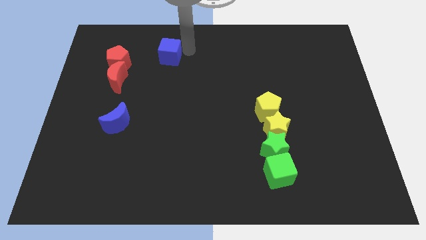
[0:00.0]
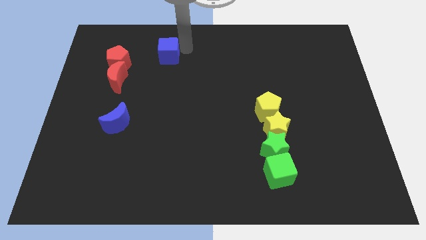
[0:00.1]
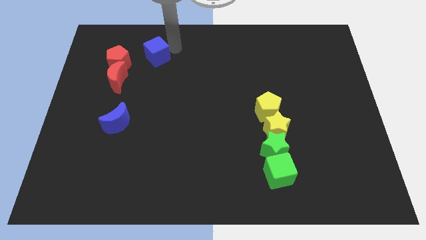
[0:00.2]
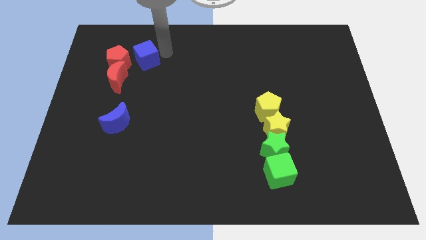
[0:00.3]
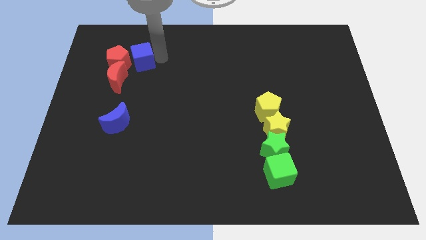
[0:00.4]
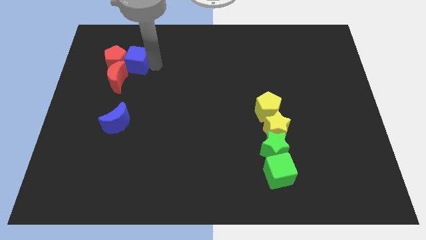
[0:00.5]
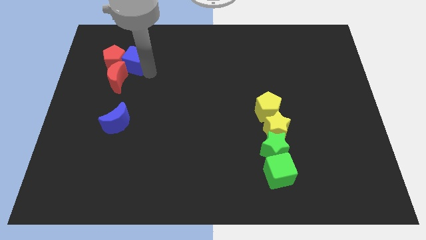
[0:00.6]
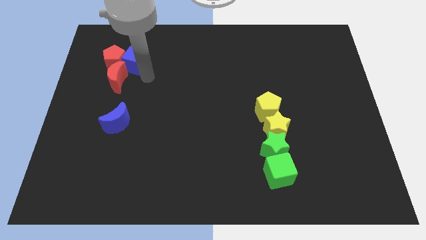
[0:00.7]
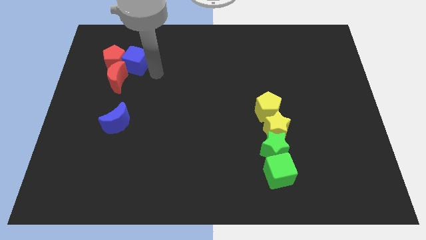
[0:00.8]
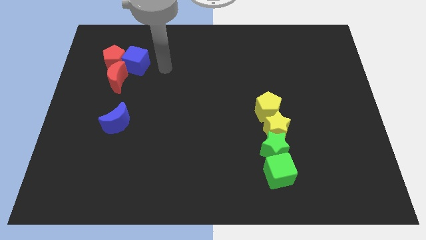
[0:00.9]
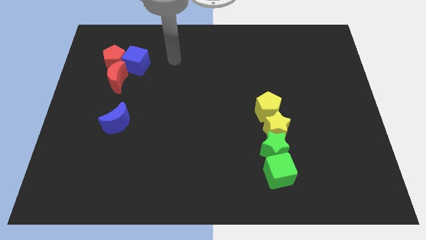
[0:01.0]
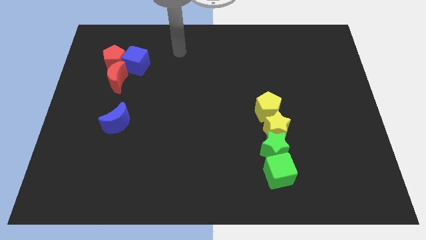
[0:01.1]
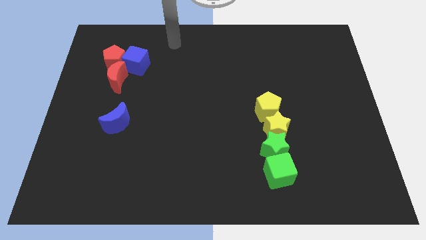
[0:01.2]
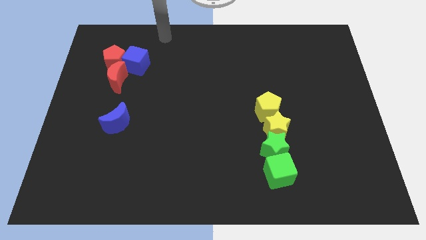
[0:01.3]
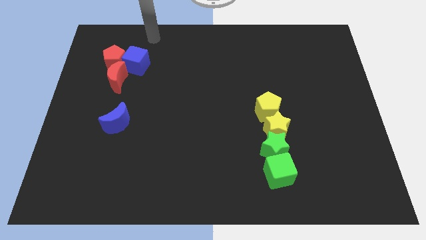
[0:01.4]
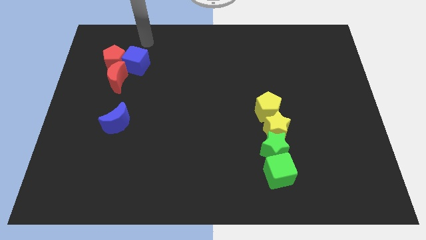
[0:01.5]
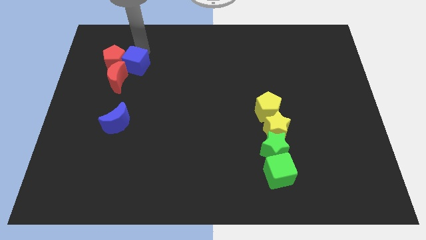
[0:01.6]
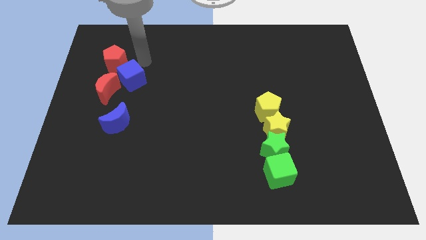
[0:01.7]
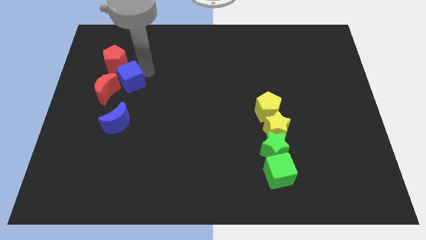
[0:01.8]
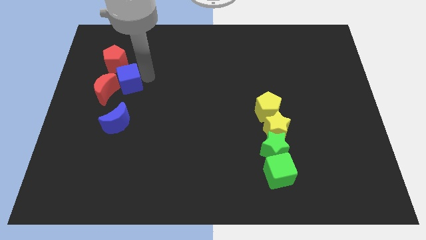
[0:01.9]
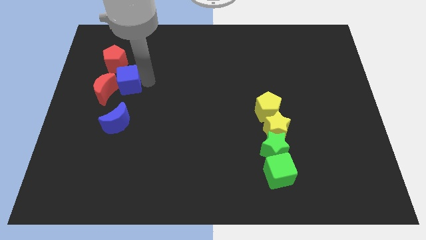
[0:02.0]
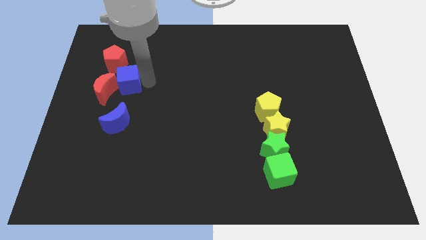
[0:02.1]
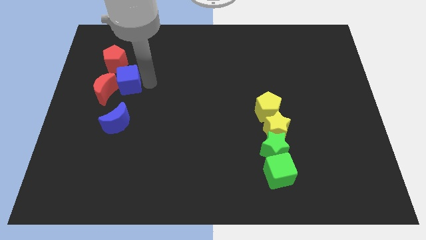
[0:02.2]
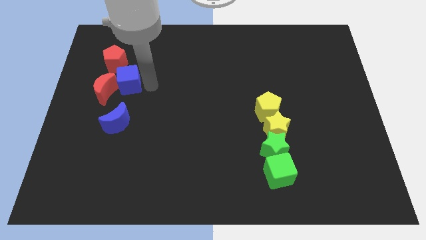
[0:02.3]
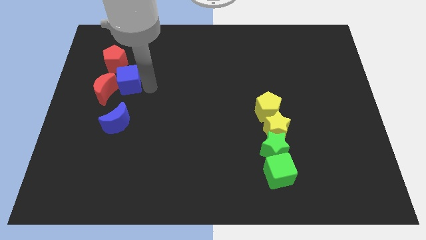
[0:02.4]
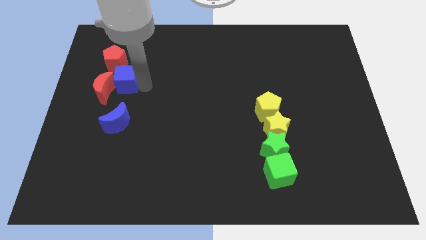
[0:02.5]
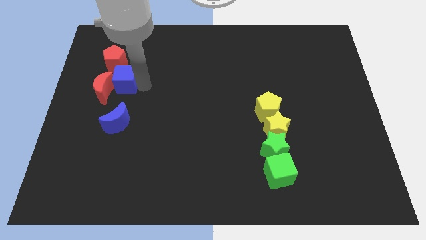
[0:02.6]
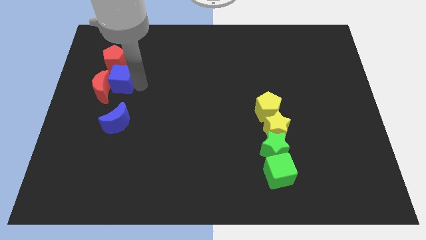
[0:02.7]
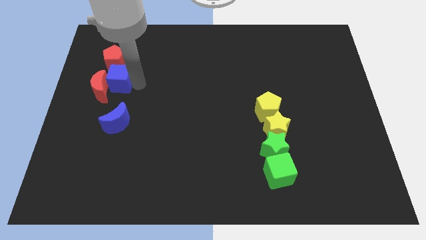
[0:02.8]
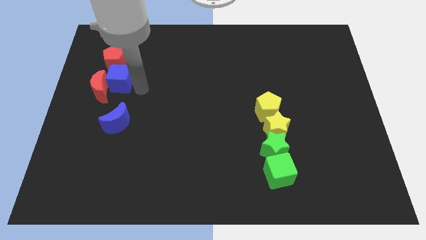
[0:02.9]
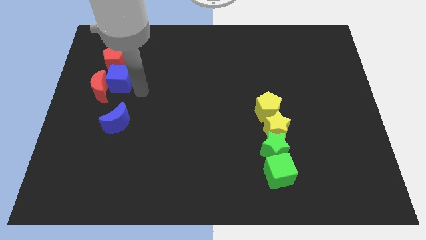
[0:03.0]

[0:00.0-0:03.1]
move the blue cube down to the red pentagon

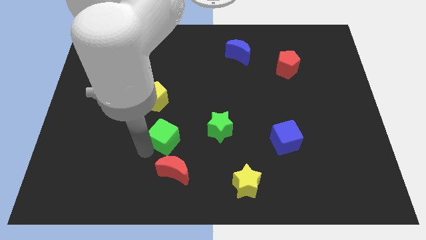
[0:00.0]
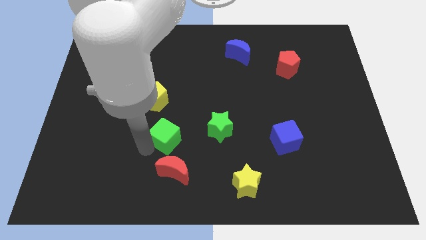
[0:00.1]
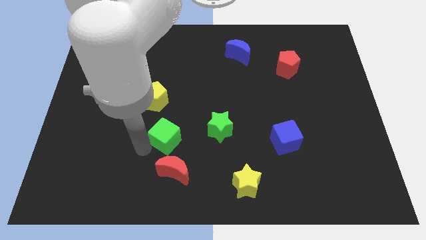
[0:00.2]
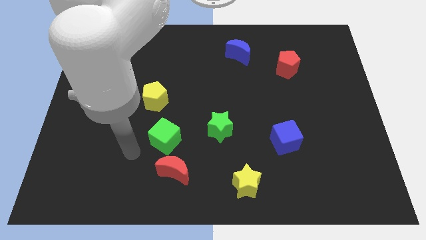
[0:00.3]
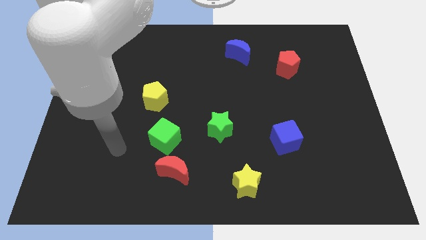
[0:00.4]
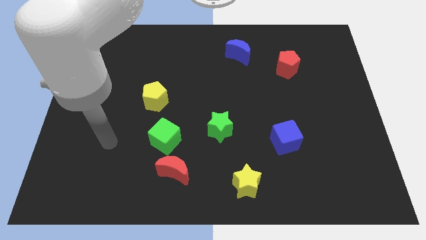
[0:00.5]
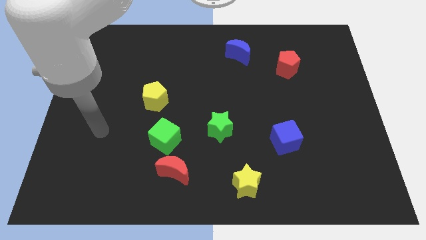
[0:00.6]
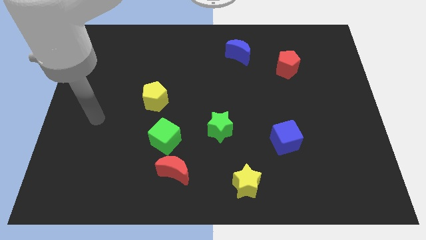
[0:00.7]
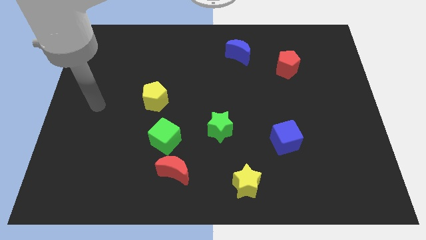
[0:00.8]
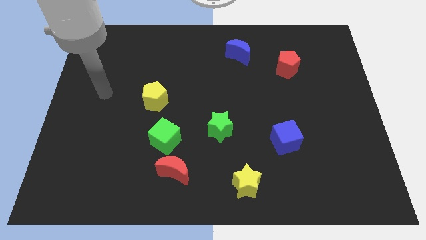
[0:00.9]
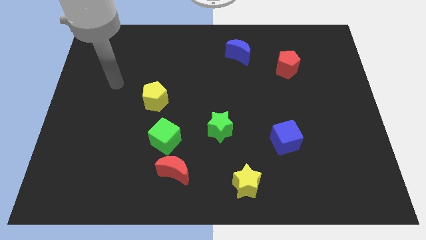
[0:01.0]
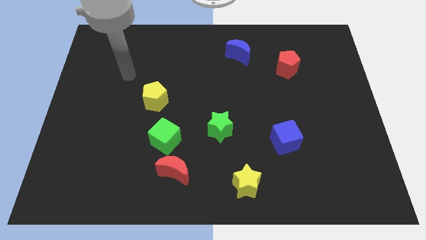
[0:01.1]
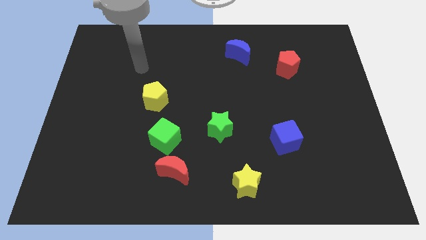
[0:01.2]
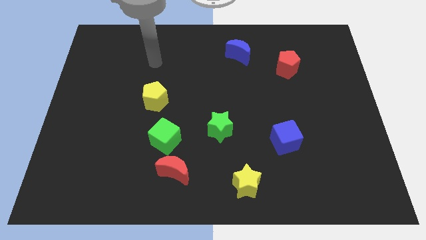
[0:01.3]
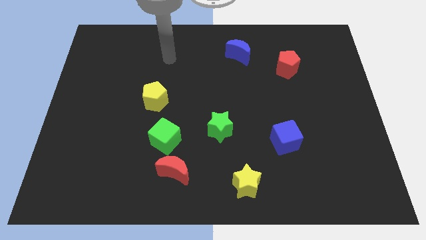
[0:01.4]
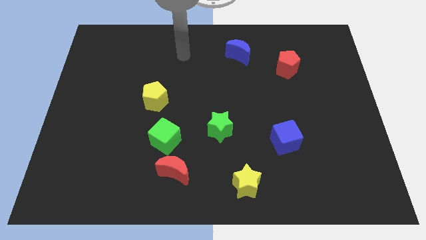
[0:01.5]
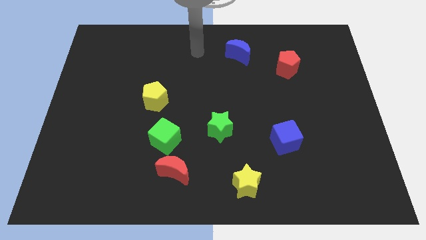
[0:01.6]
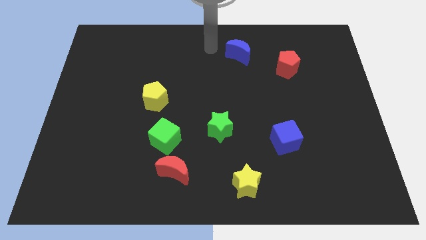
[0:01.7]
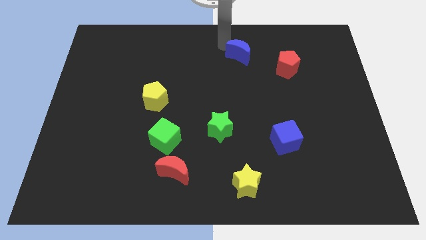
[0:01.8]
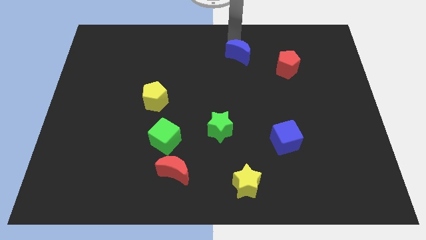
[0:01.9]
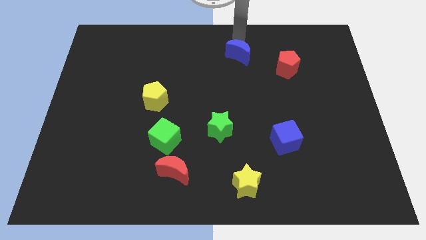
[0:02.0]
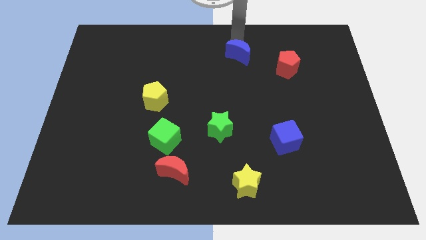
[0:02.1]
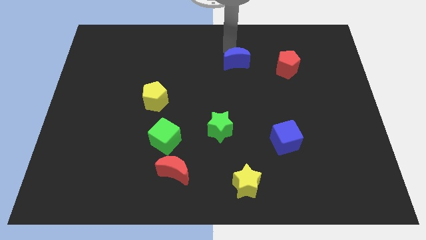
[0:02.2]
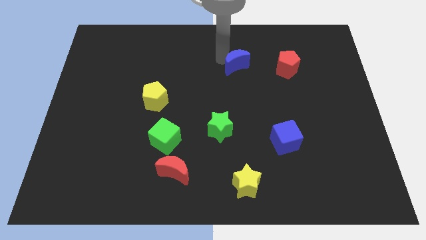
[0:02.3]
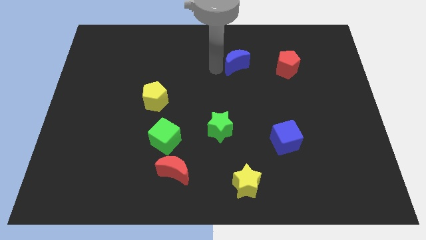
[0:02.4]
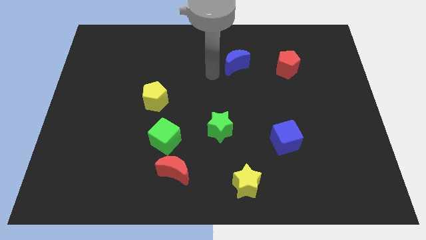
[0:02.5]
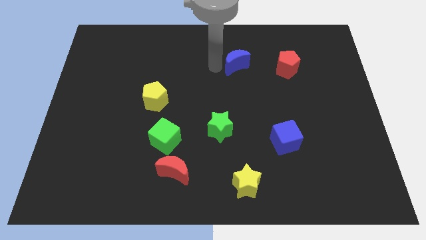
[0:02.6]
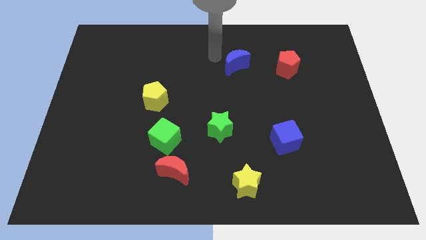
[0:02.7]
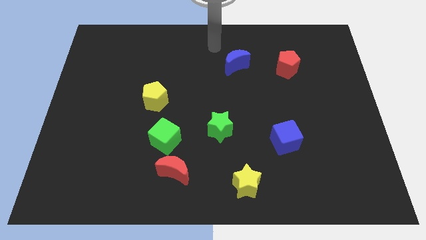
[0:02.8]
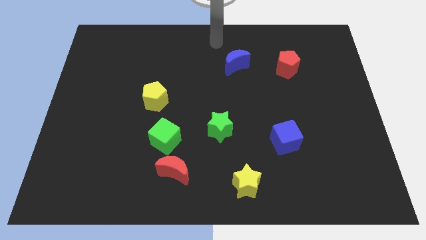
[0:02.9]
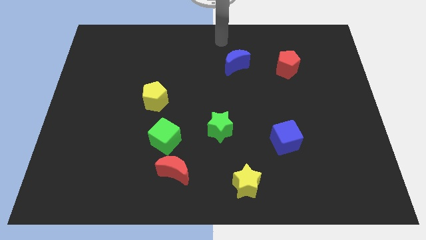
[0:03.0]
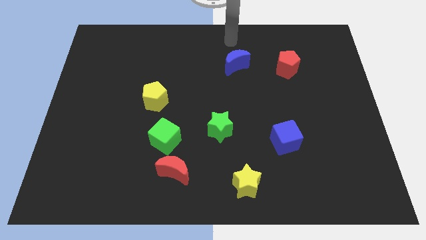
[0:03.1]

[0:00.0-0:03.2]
move the blue moon slightly

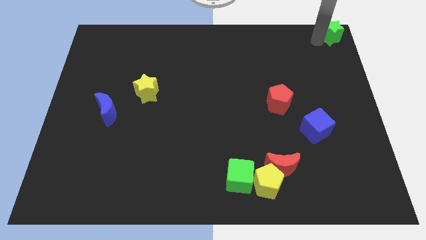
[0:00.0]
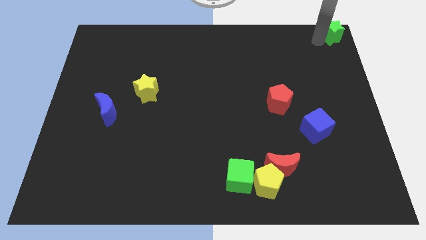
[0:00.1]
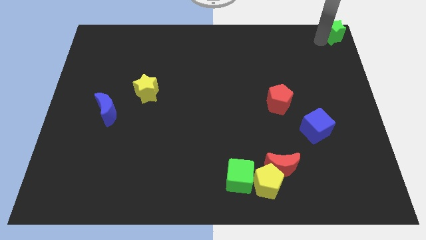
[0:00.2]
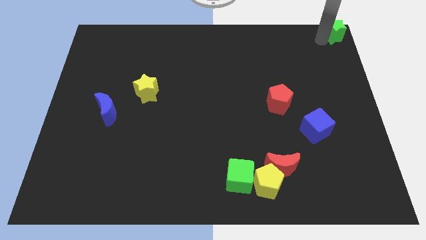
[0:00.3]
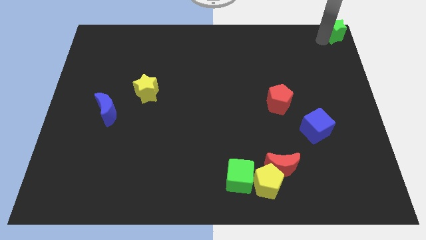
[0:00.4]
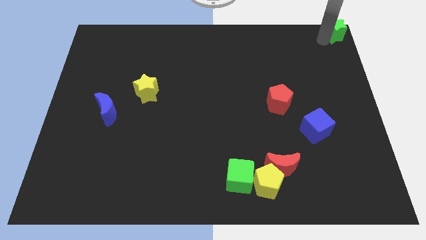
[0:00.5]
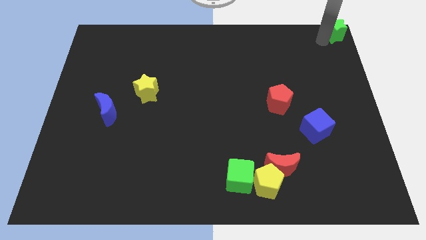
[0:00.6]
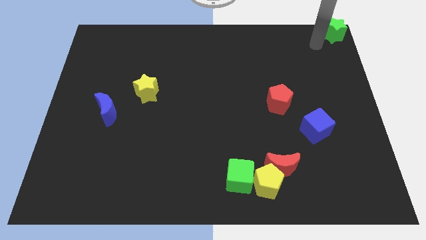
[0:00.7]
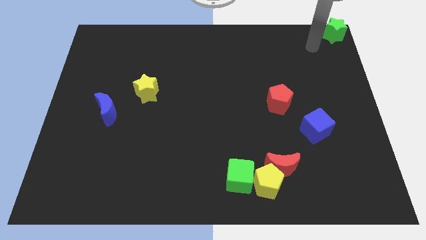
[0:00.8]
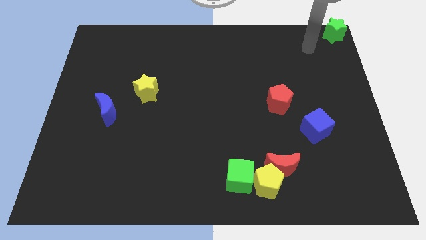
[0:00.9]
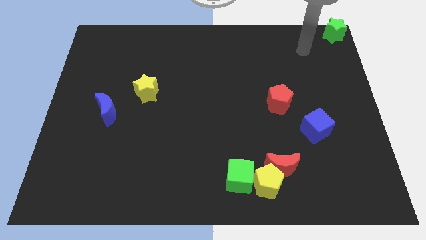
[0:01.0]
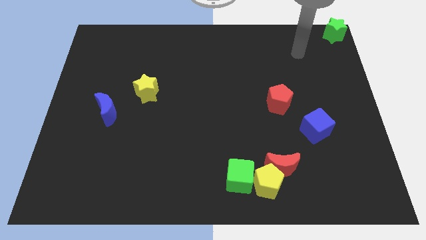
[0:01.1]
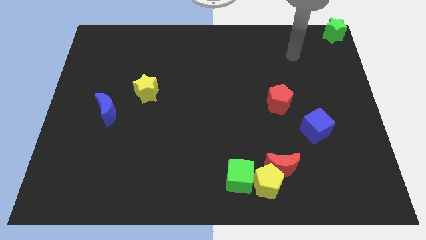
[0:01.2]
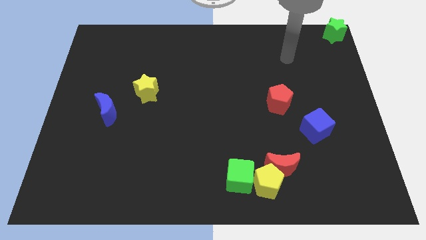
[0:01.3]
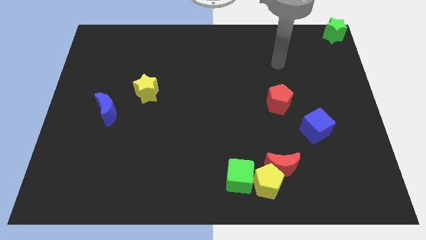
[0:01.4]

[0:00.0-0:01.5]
slightly move the green star to the top right corner of the board

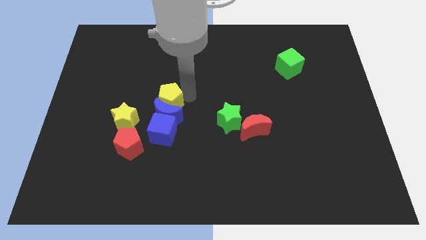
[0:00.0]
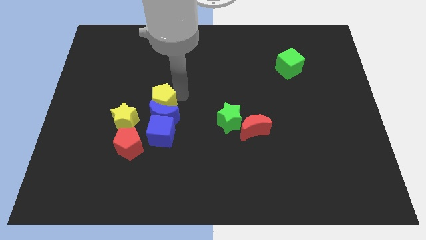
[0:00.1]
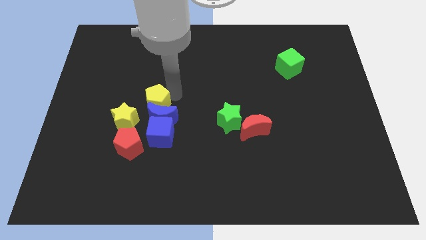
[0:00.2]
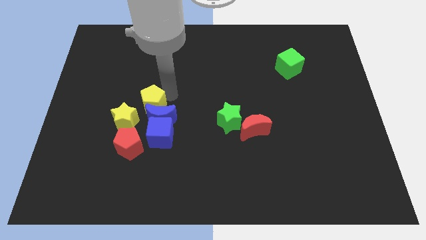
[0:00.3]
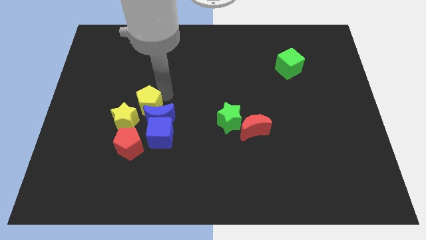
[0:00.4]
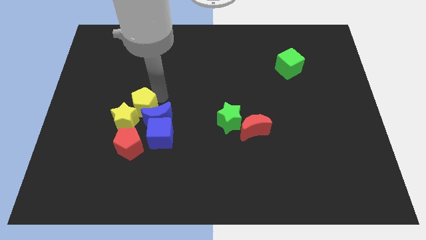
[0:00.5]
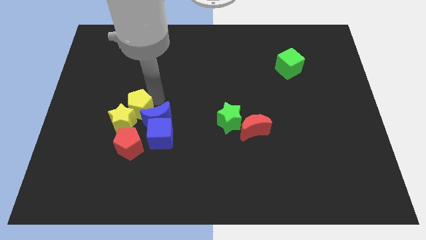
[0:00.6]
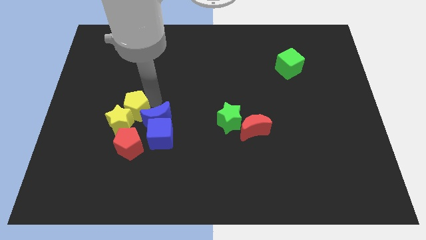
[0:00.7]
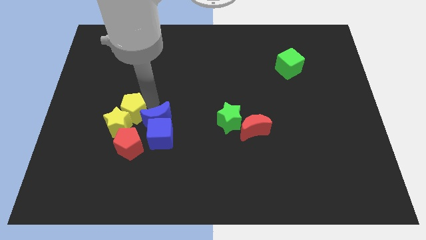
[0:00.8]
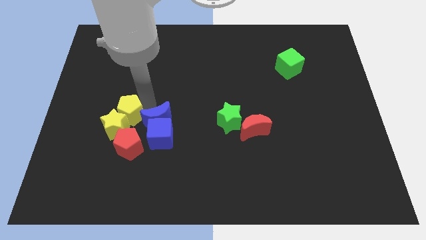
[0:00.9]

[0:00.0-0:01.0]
push the yellow pentagon into yellow star
